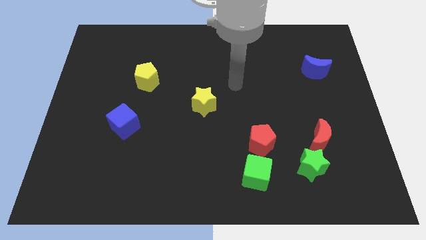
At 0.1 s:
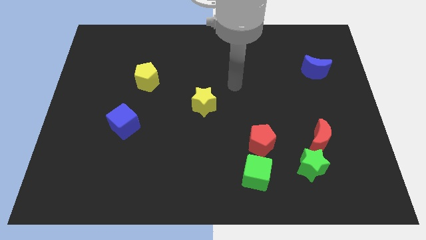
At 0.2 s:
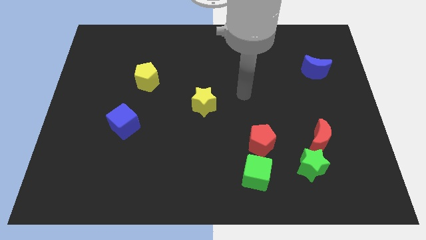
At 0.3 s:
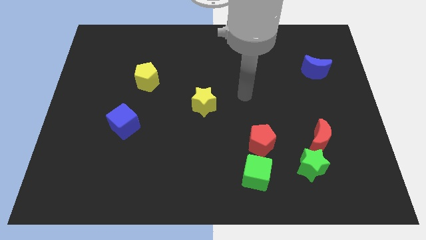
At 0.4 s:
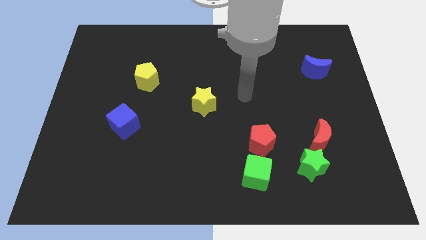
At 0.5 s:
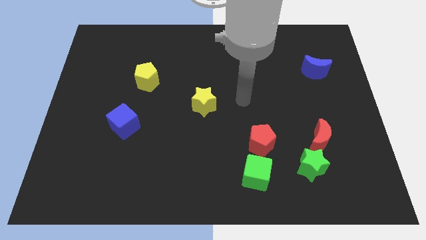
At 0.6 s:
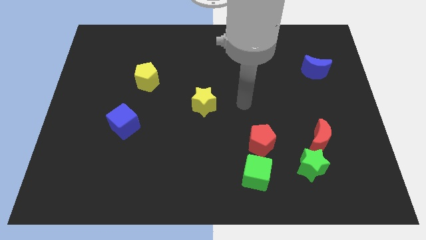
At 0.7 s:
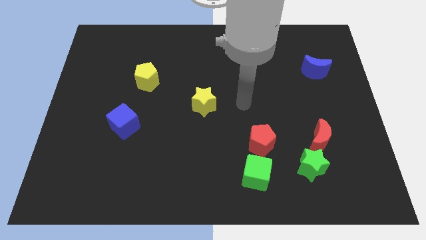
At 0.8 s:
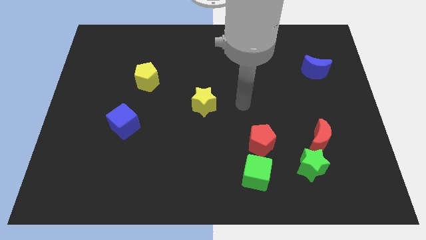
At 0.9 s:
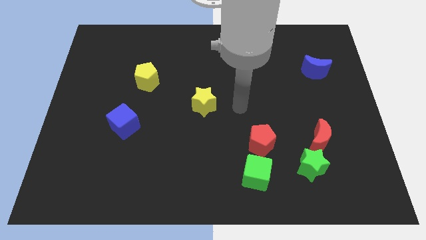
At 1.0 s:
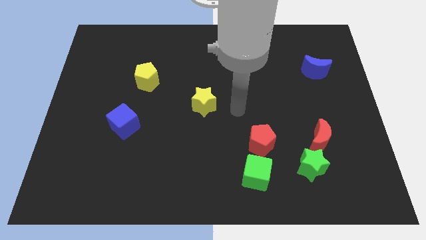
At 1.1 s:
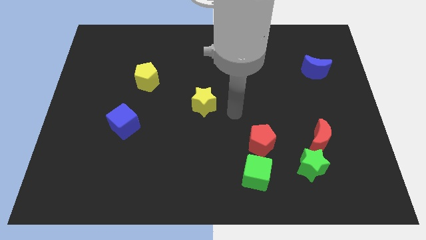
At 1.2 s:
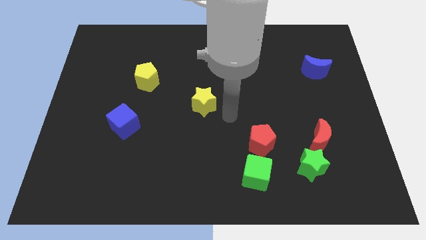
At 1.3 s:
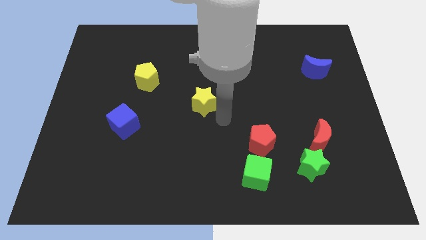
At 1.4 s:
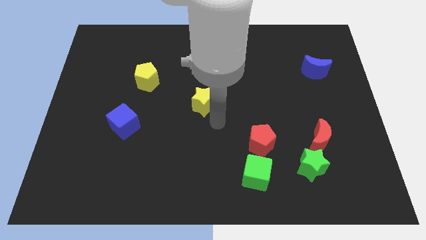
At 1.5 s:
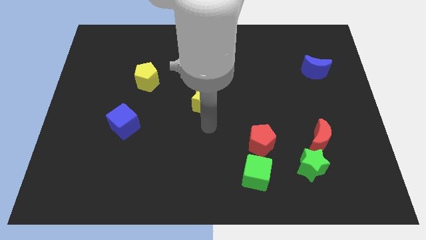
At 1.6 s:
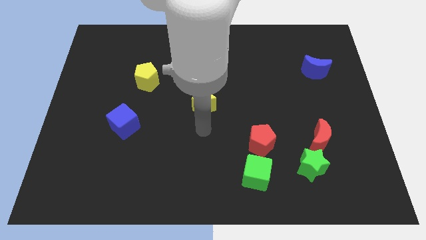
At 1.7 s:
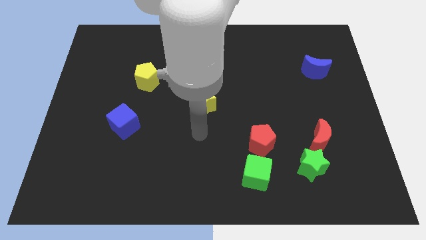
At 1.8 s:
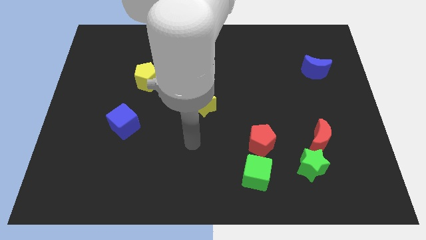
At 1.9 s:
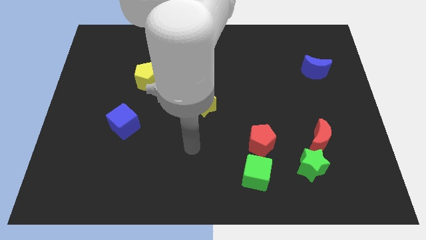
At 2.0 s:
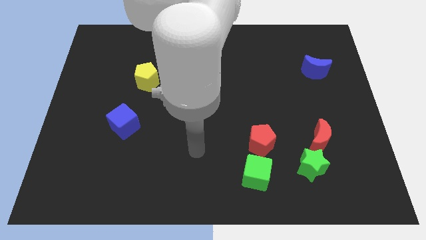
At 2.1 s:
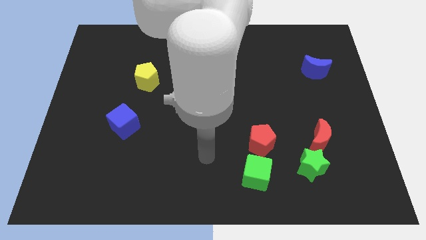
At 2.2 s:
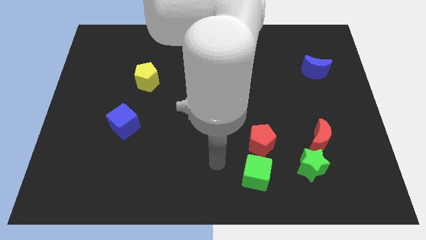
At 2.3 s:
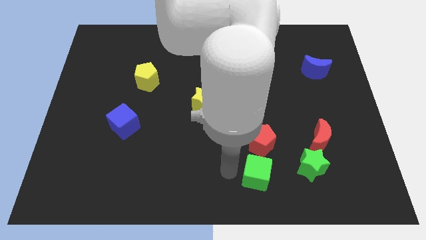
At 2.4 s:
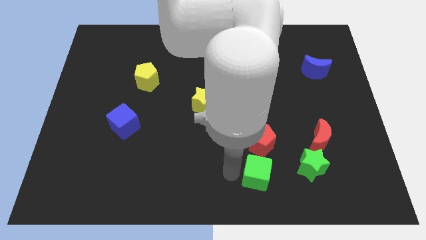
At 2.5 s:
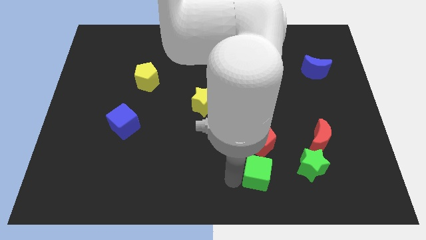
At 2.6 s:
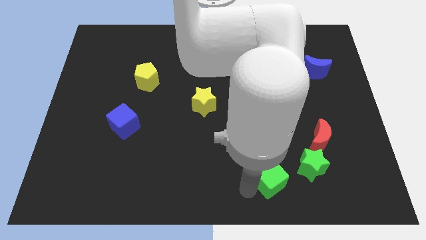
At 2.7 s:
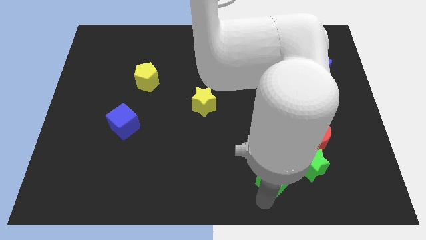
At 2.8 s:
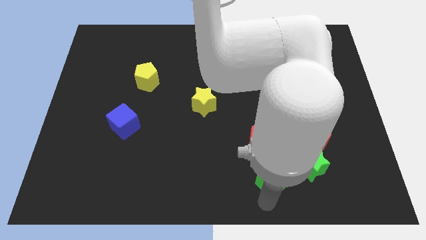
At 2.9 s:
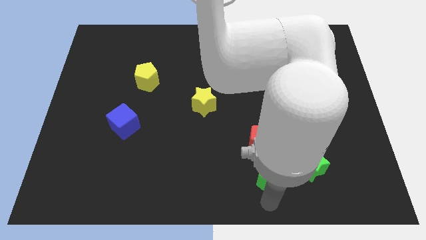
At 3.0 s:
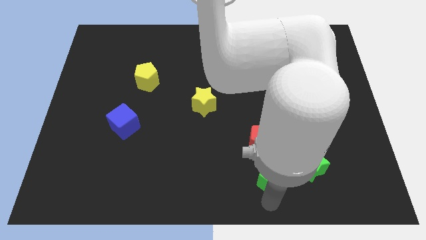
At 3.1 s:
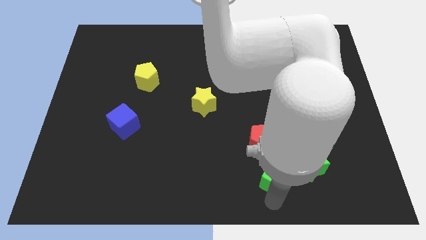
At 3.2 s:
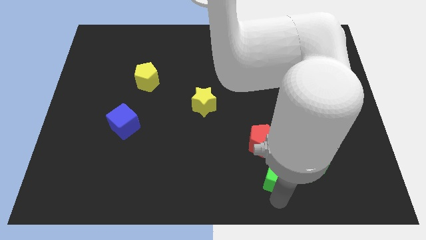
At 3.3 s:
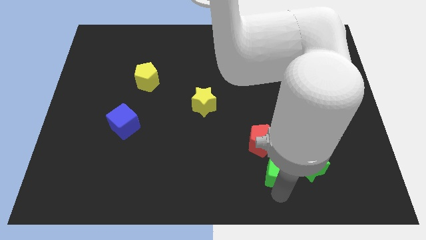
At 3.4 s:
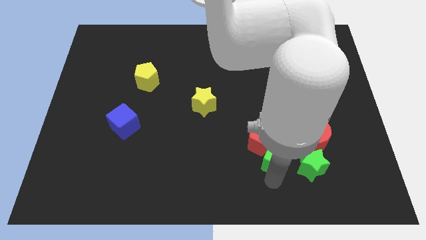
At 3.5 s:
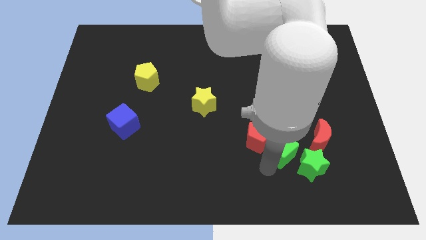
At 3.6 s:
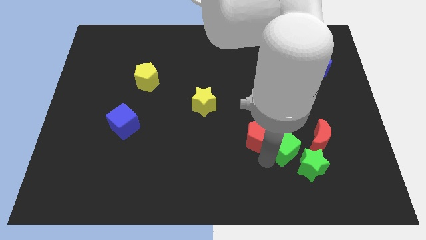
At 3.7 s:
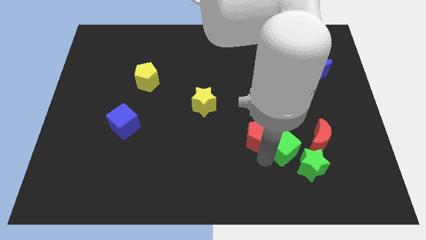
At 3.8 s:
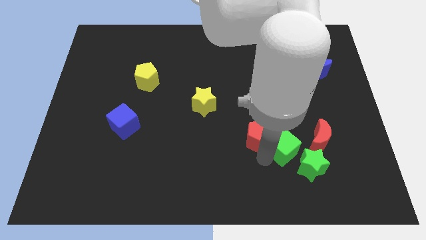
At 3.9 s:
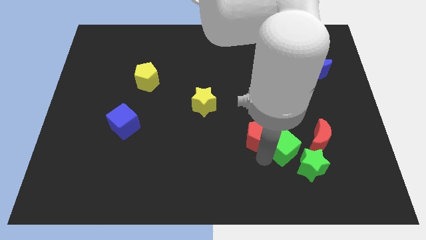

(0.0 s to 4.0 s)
place the green cube to the bottom left of the green star

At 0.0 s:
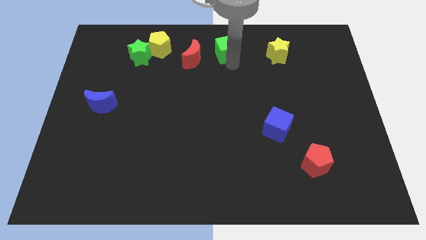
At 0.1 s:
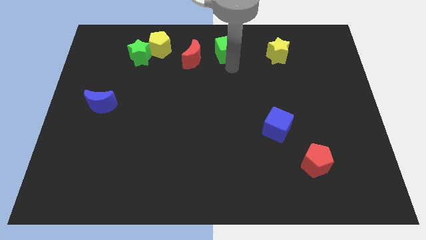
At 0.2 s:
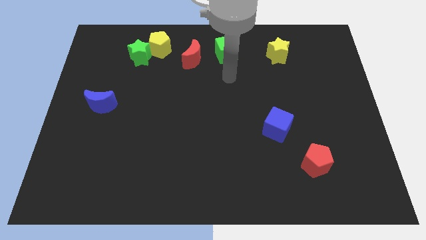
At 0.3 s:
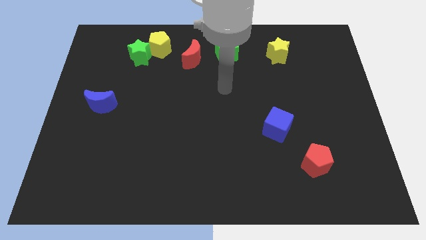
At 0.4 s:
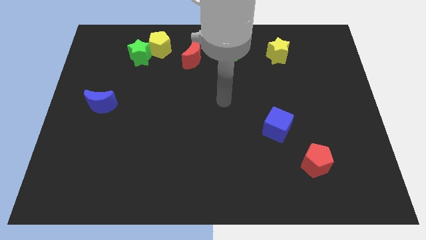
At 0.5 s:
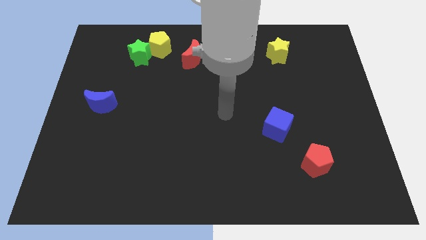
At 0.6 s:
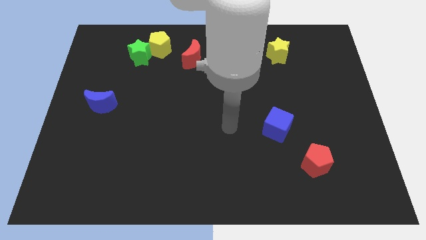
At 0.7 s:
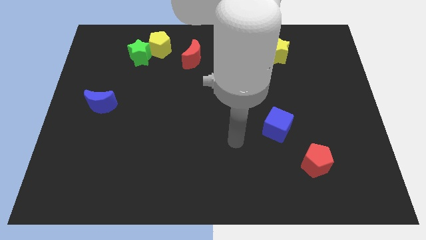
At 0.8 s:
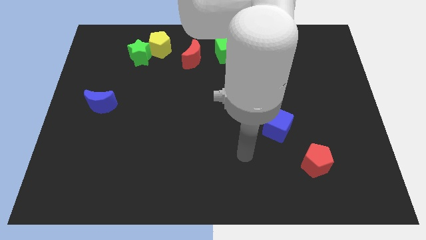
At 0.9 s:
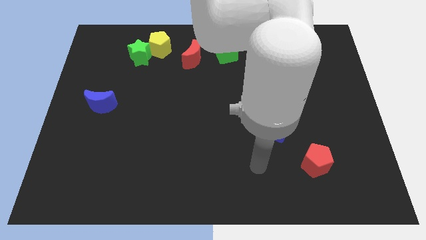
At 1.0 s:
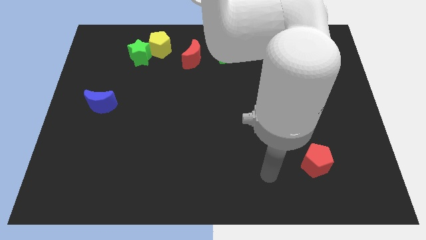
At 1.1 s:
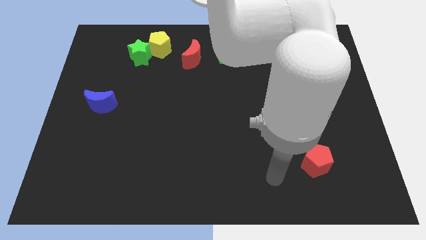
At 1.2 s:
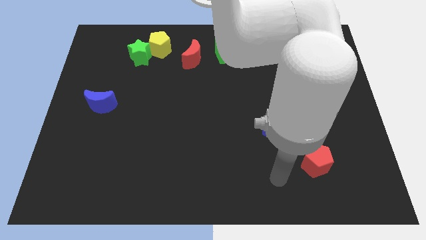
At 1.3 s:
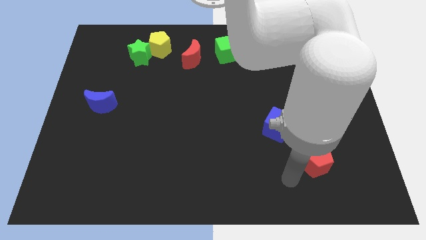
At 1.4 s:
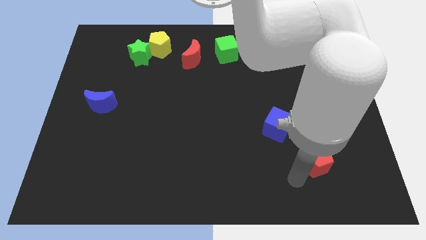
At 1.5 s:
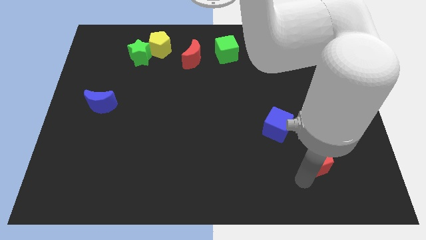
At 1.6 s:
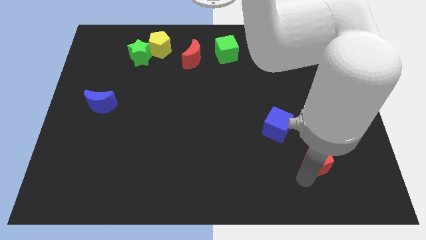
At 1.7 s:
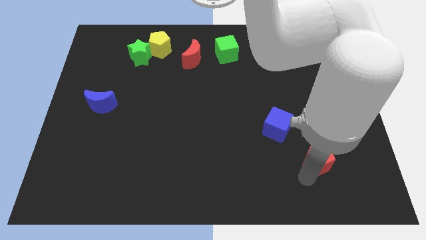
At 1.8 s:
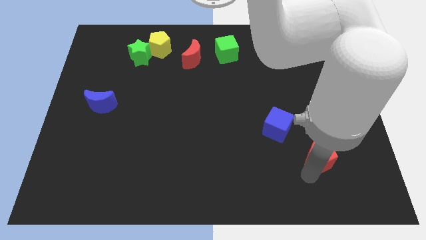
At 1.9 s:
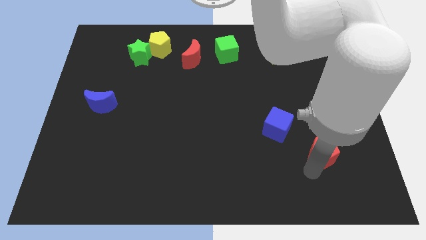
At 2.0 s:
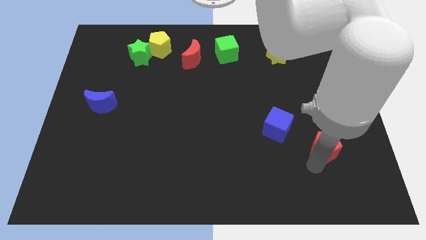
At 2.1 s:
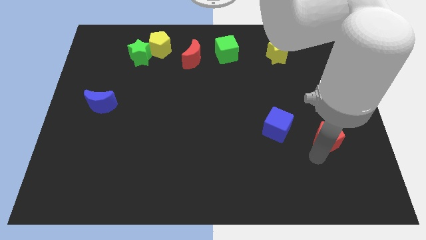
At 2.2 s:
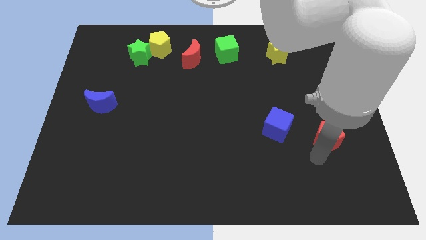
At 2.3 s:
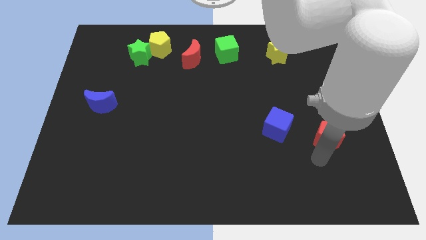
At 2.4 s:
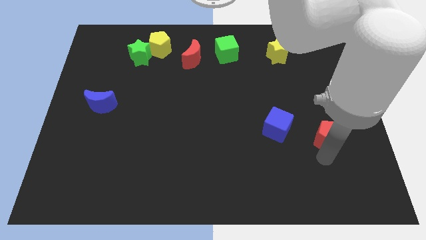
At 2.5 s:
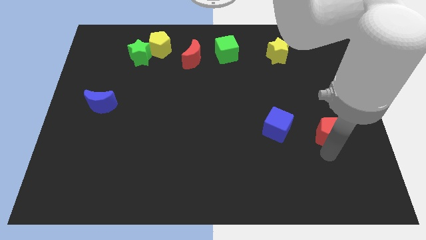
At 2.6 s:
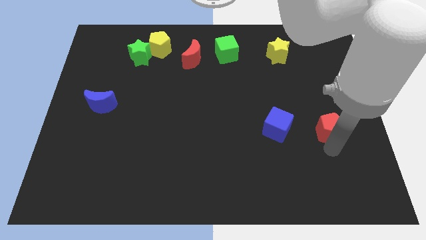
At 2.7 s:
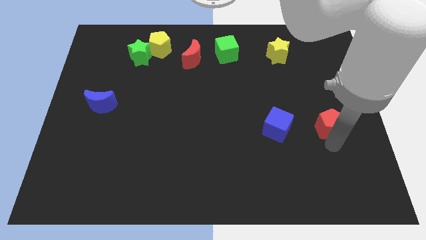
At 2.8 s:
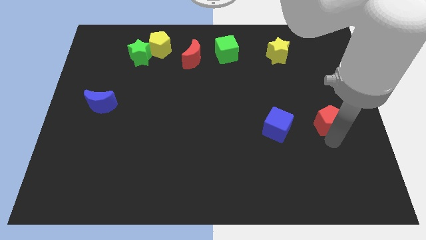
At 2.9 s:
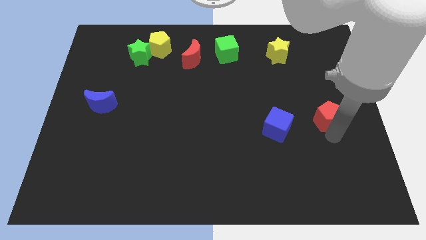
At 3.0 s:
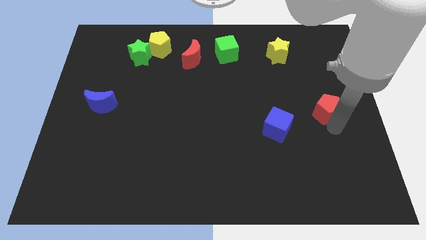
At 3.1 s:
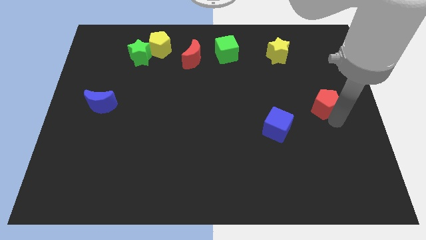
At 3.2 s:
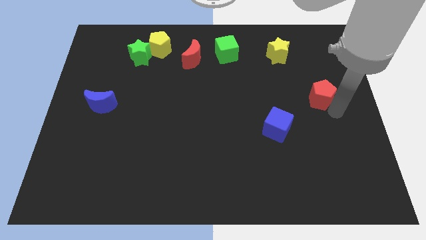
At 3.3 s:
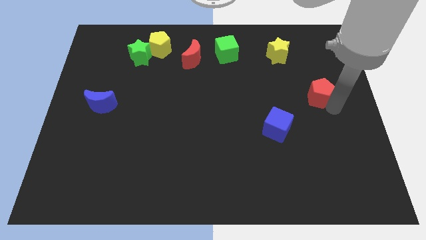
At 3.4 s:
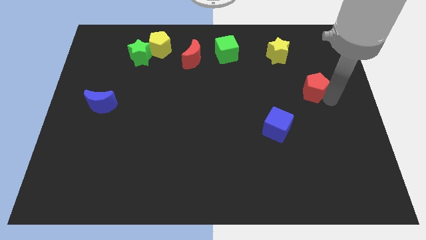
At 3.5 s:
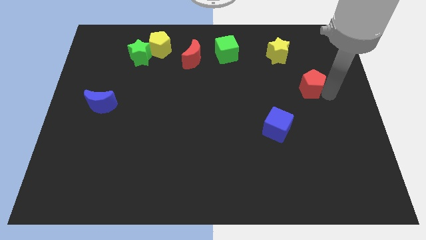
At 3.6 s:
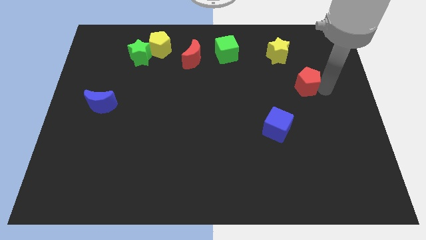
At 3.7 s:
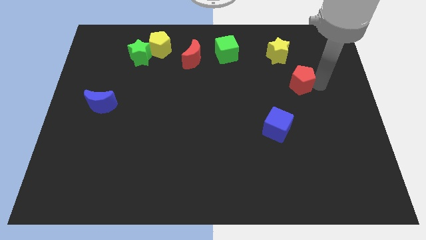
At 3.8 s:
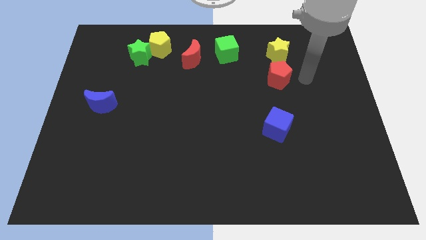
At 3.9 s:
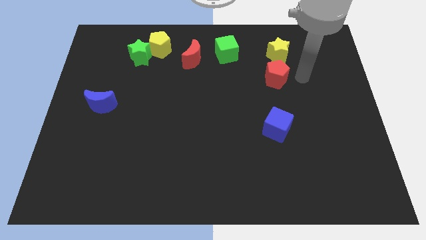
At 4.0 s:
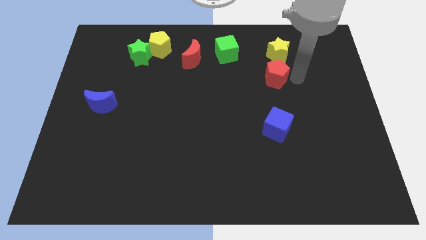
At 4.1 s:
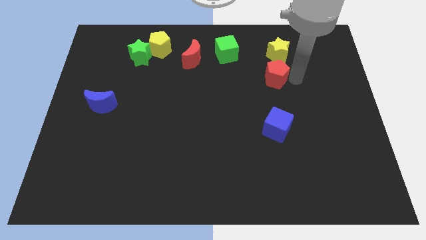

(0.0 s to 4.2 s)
place the red pentagon in between yellow star and blue cube

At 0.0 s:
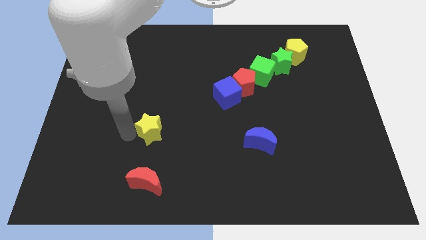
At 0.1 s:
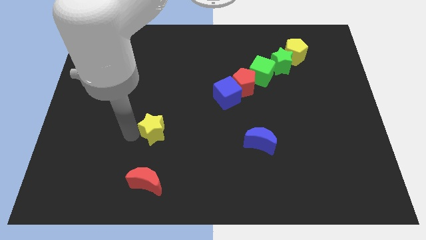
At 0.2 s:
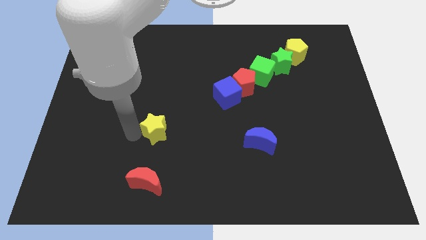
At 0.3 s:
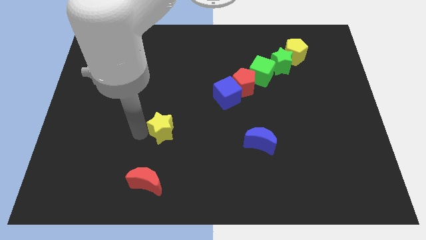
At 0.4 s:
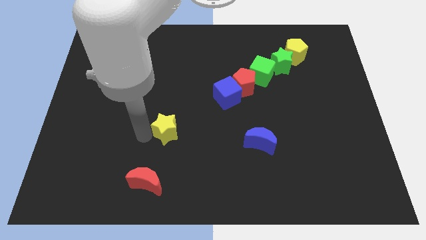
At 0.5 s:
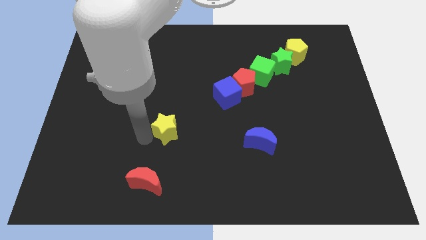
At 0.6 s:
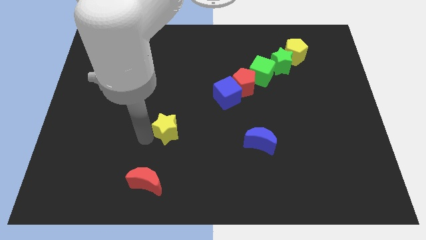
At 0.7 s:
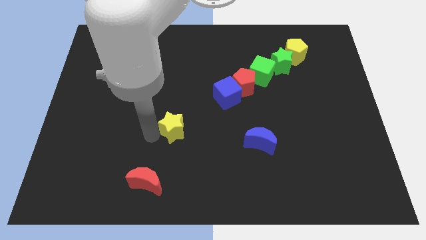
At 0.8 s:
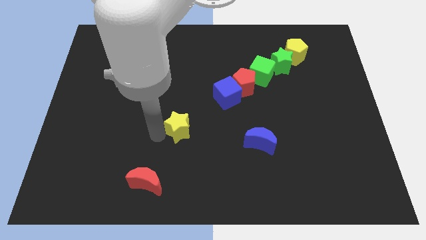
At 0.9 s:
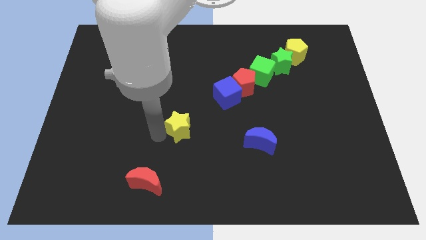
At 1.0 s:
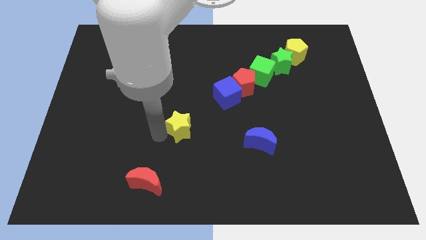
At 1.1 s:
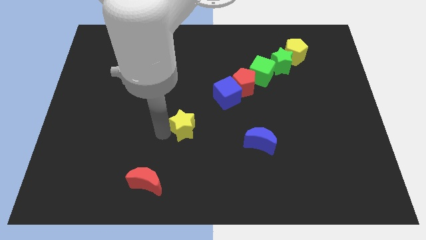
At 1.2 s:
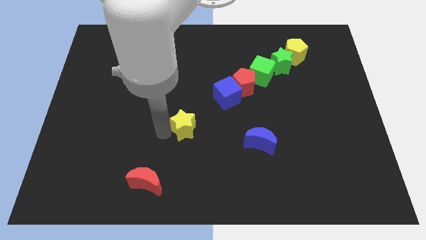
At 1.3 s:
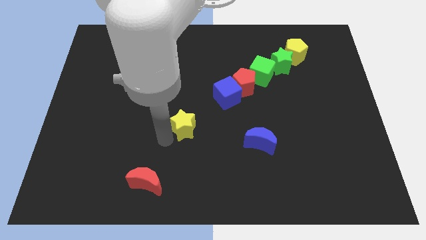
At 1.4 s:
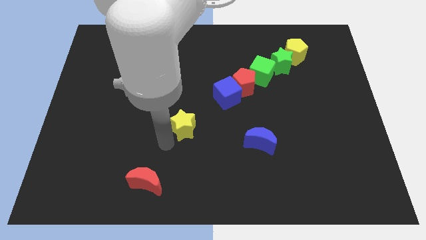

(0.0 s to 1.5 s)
move the yellow star diagonal top right to red moon
